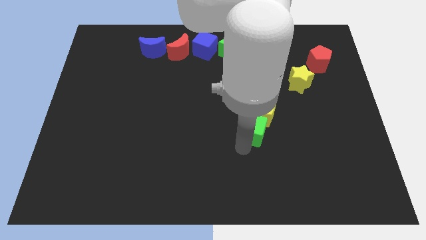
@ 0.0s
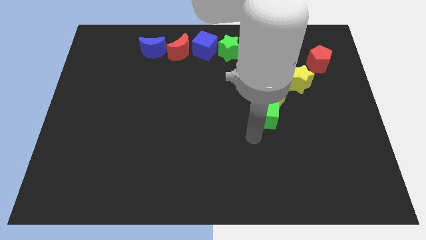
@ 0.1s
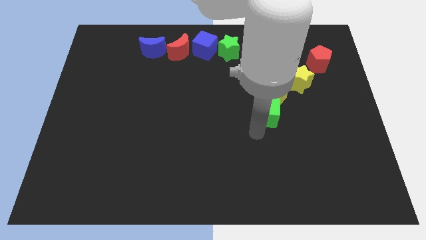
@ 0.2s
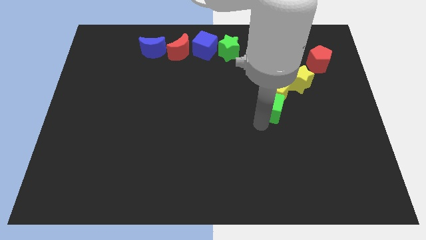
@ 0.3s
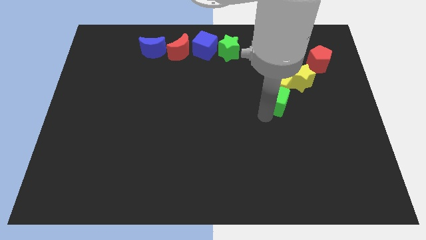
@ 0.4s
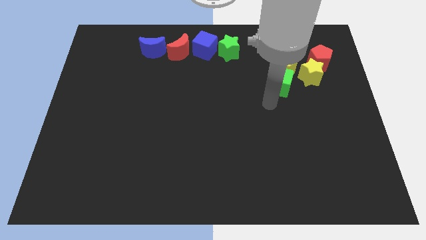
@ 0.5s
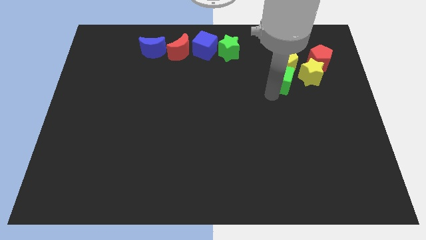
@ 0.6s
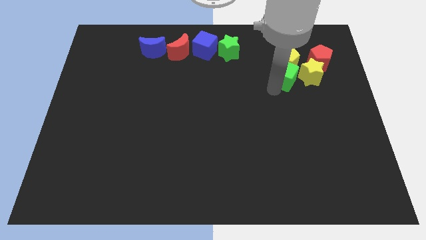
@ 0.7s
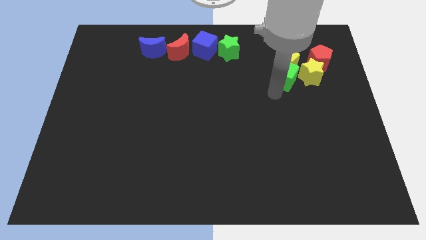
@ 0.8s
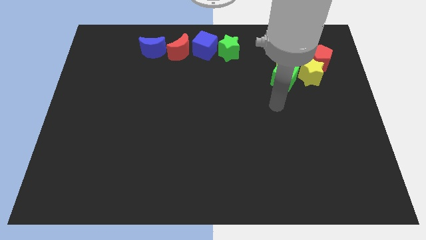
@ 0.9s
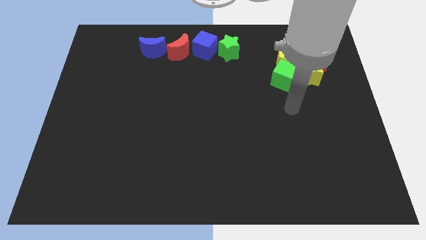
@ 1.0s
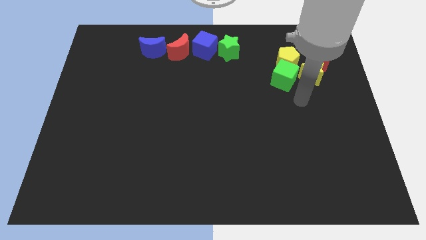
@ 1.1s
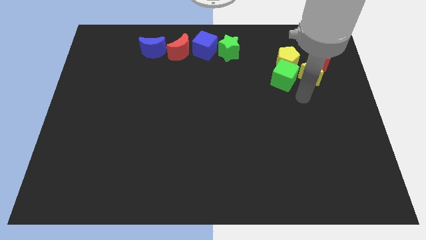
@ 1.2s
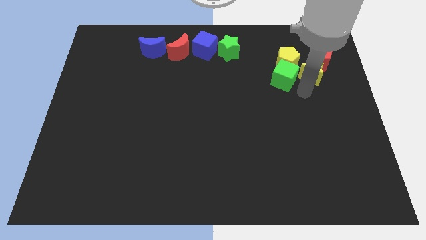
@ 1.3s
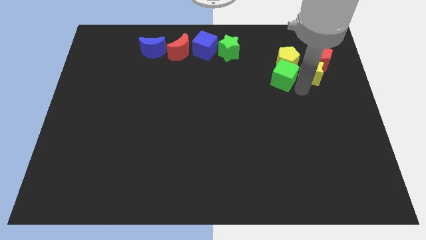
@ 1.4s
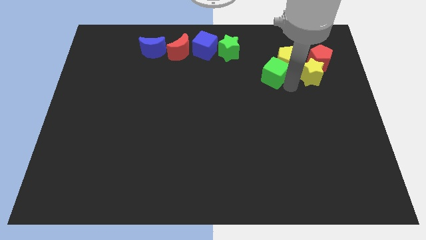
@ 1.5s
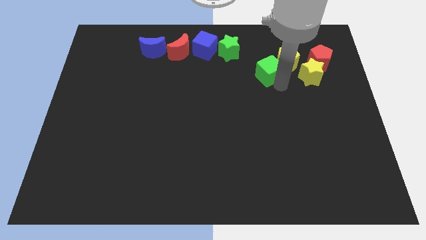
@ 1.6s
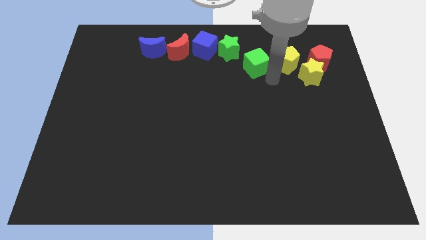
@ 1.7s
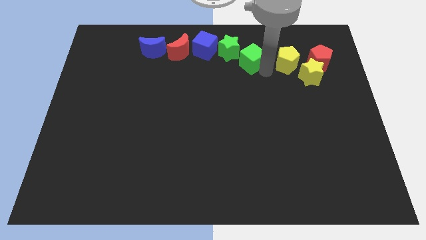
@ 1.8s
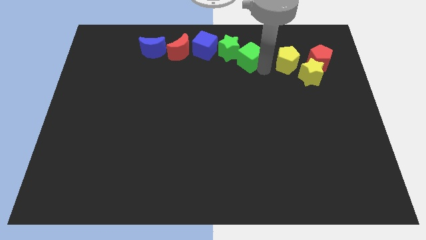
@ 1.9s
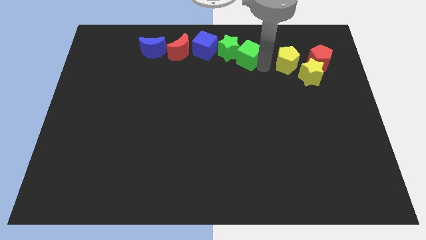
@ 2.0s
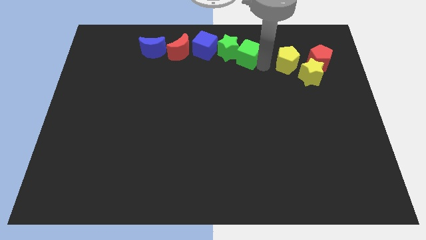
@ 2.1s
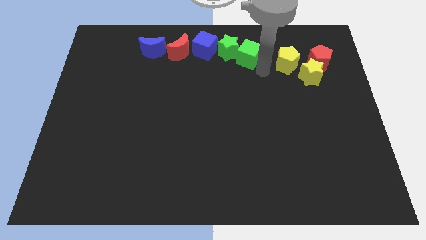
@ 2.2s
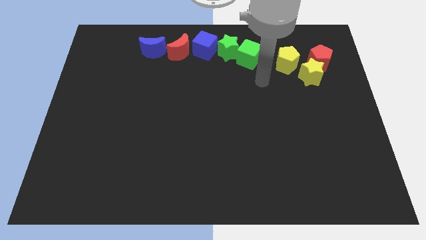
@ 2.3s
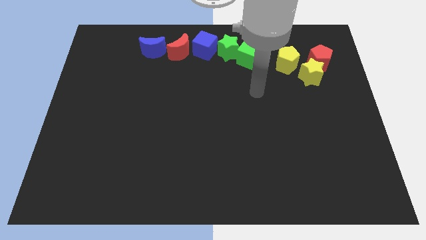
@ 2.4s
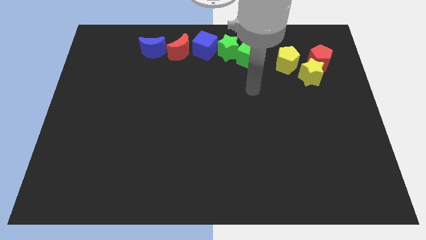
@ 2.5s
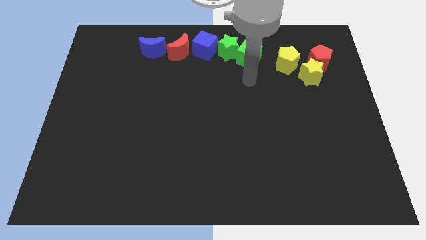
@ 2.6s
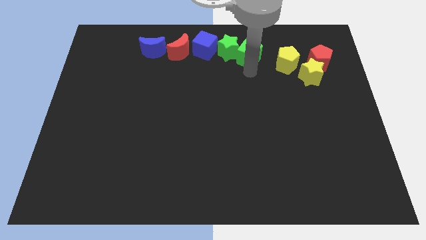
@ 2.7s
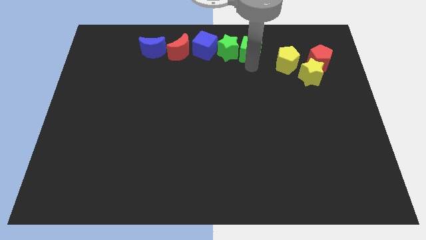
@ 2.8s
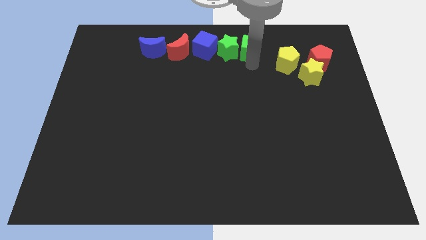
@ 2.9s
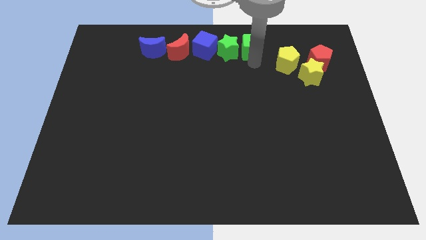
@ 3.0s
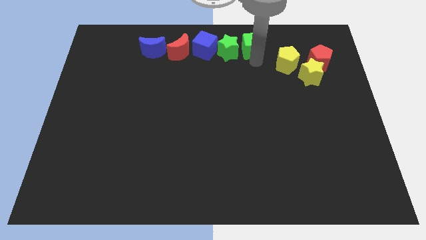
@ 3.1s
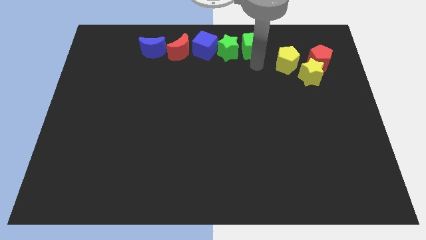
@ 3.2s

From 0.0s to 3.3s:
move green cube right to the green star

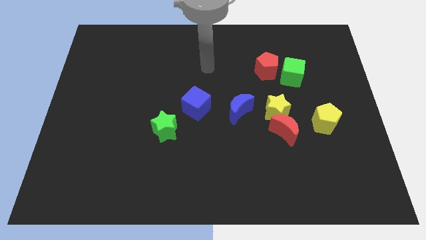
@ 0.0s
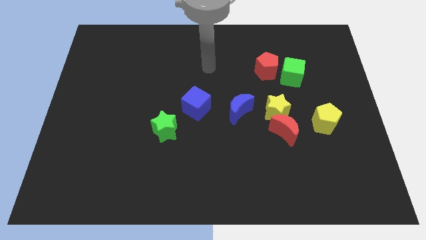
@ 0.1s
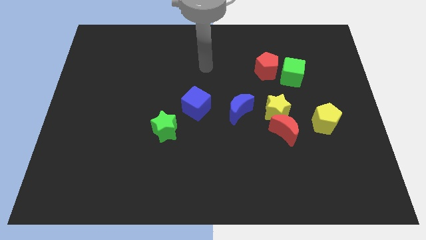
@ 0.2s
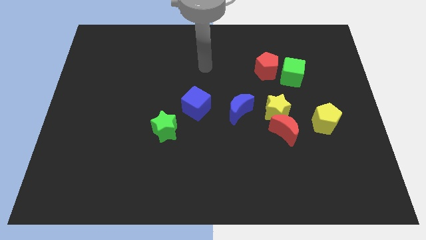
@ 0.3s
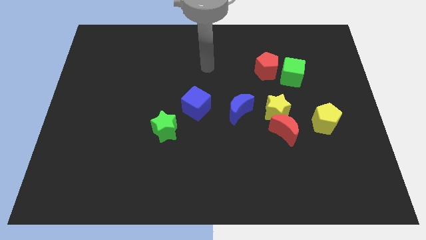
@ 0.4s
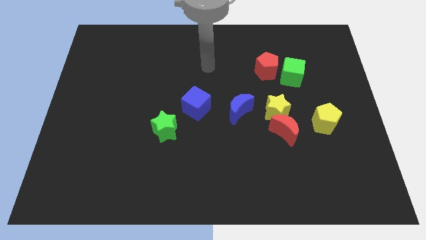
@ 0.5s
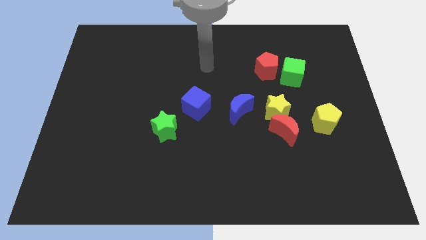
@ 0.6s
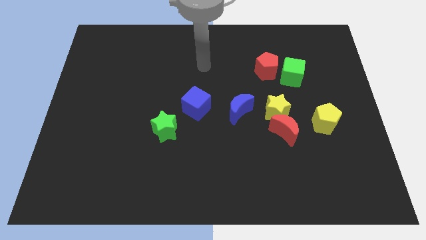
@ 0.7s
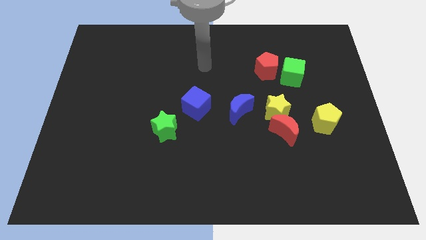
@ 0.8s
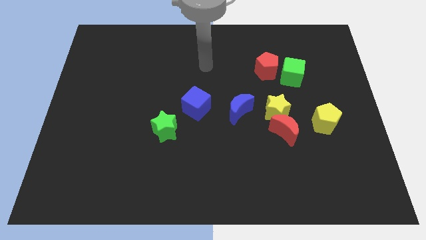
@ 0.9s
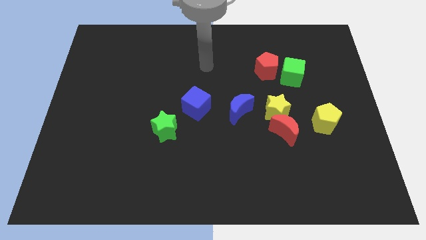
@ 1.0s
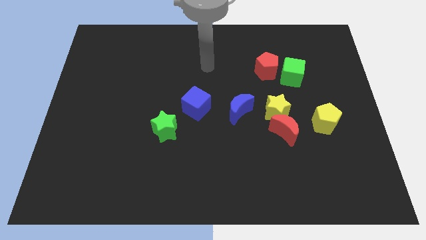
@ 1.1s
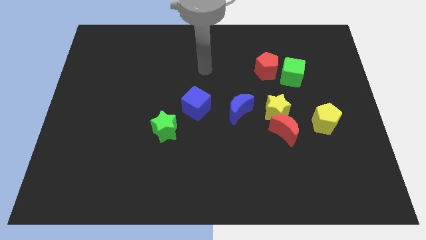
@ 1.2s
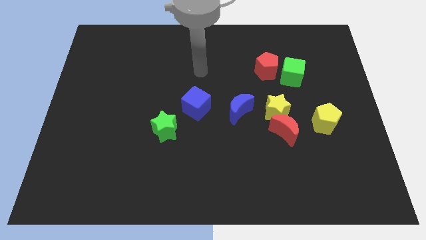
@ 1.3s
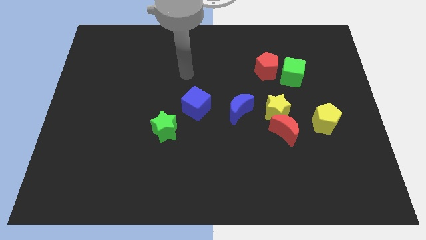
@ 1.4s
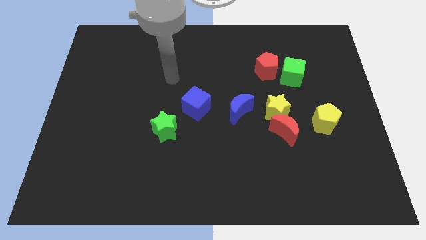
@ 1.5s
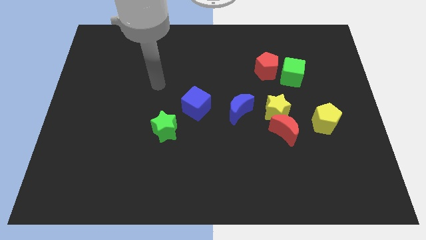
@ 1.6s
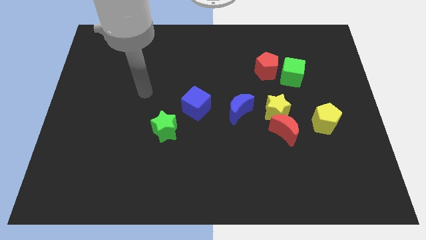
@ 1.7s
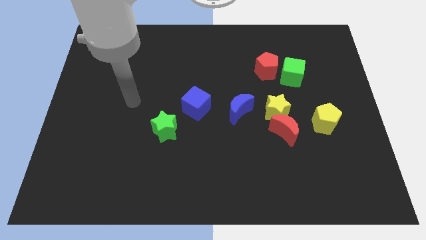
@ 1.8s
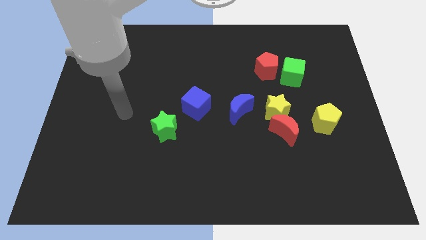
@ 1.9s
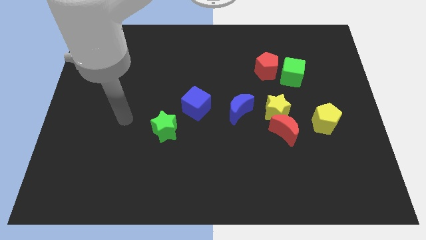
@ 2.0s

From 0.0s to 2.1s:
place the arm to the left of green star

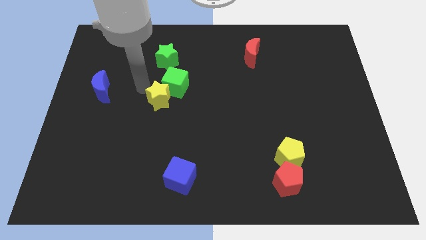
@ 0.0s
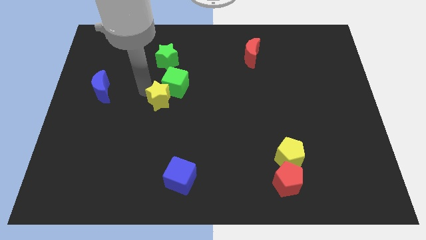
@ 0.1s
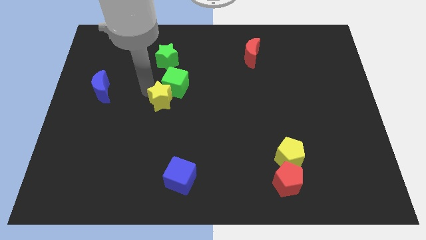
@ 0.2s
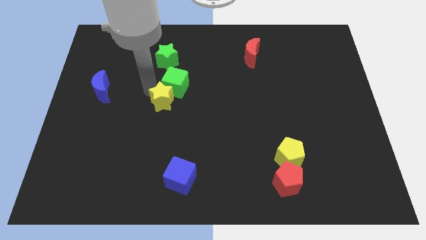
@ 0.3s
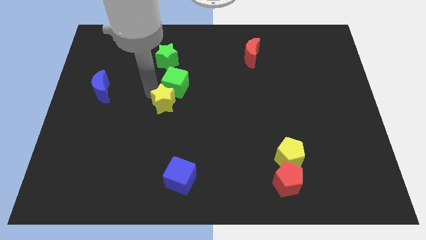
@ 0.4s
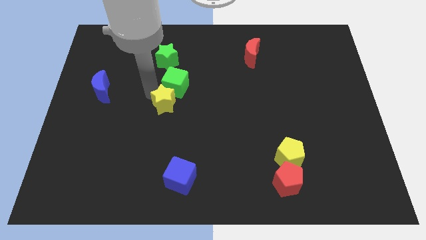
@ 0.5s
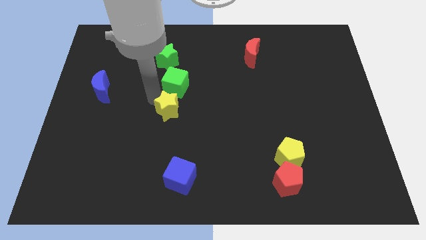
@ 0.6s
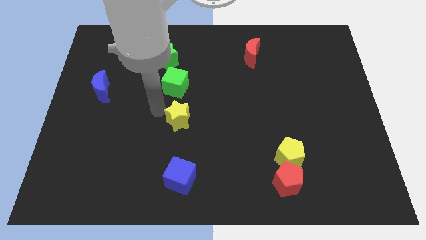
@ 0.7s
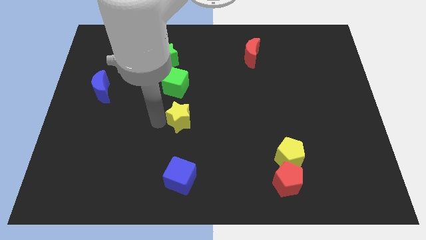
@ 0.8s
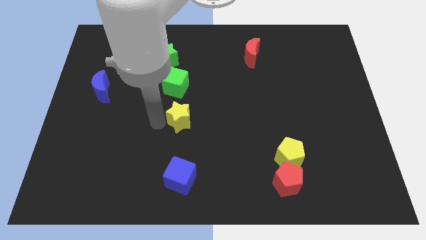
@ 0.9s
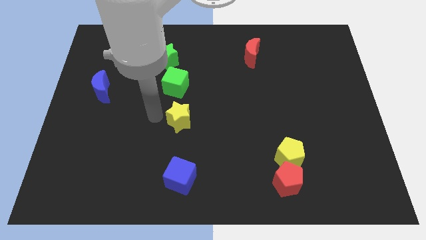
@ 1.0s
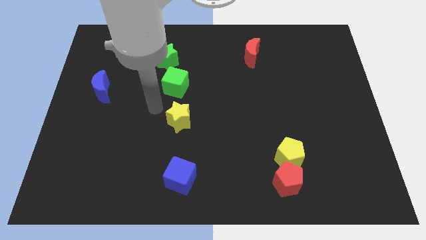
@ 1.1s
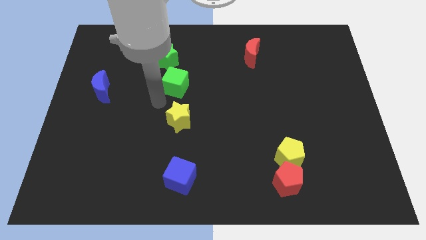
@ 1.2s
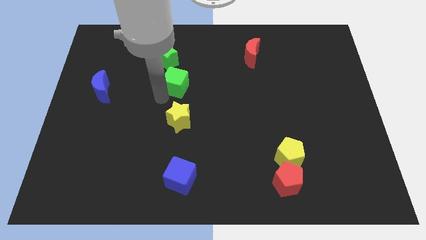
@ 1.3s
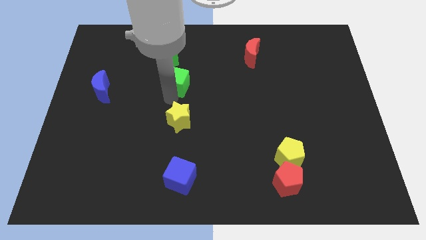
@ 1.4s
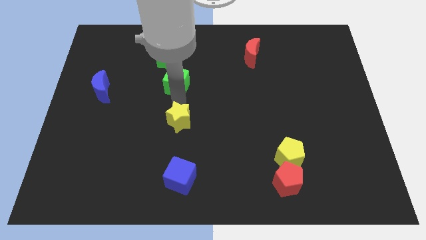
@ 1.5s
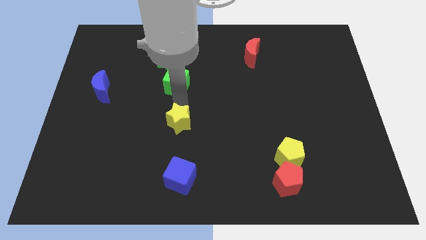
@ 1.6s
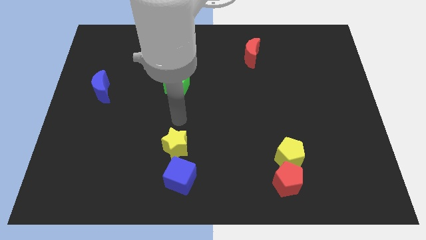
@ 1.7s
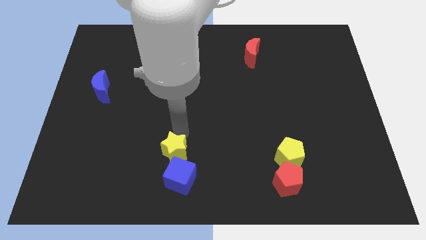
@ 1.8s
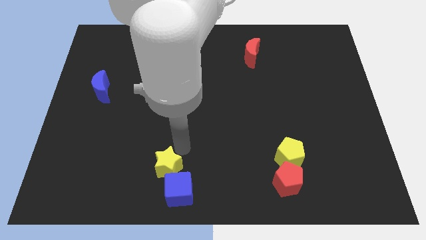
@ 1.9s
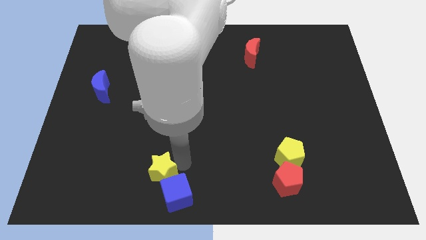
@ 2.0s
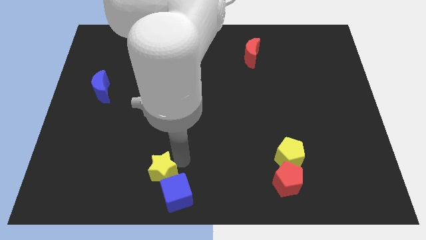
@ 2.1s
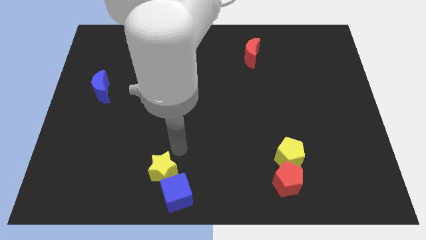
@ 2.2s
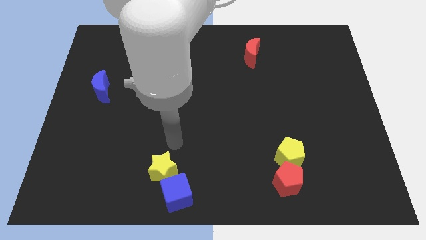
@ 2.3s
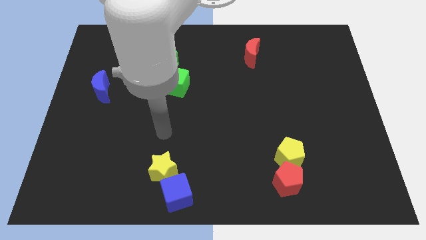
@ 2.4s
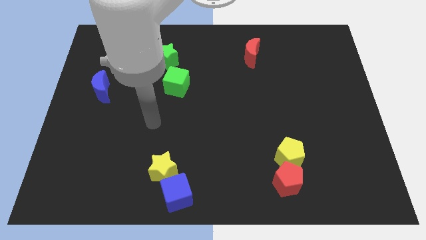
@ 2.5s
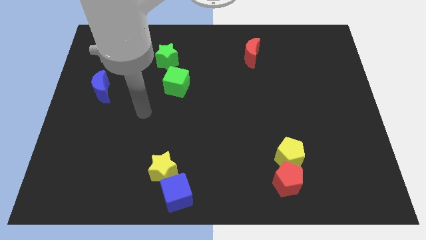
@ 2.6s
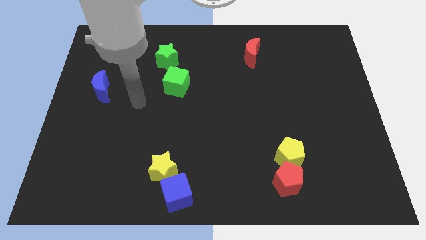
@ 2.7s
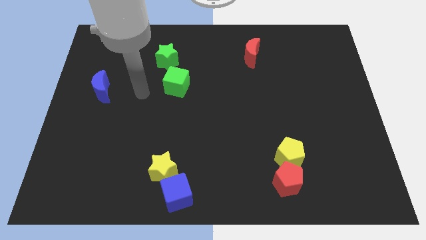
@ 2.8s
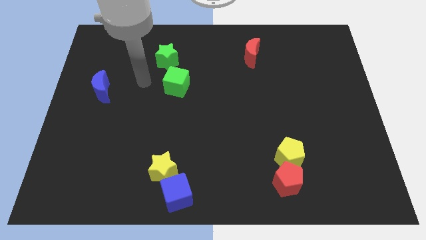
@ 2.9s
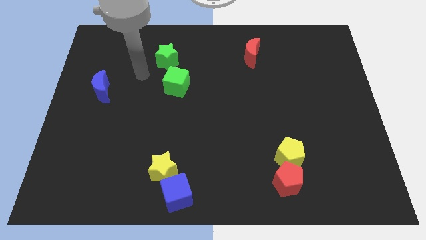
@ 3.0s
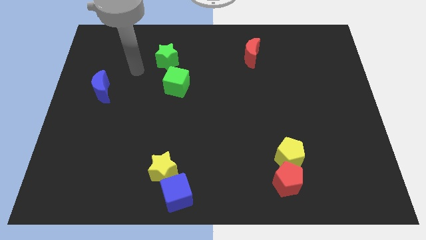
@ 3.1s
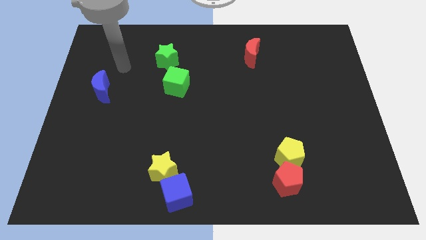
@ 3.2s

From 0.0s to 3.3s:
push the yellow star into the blue cube

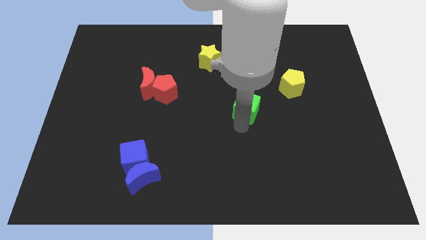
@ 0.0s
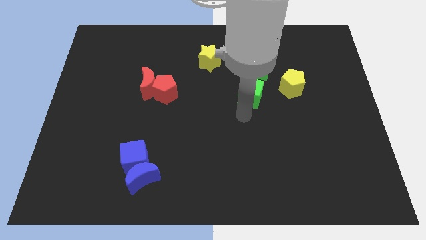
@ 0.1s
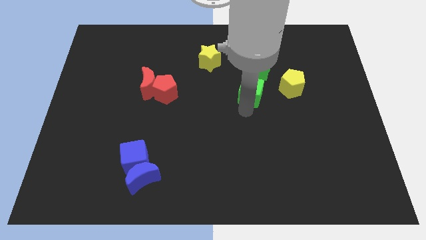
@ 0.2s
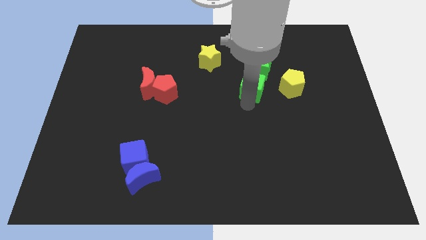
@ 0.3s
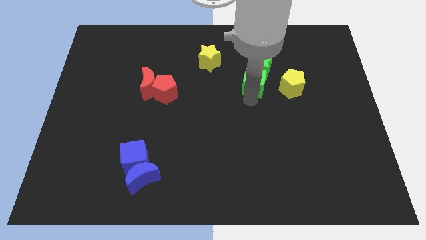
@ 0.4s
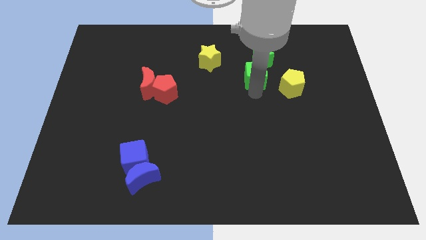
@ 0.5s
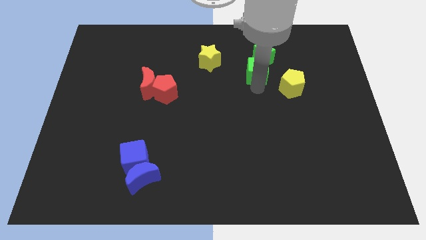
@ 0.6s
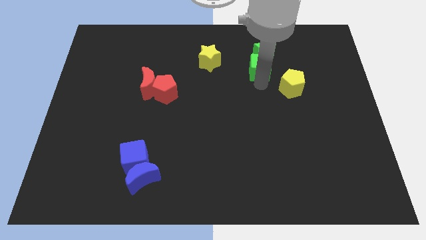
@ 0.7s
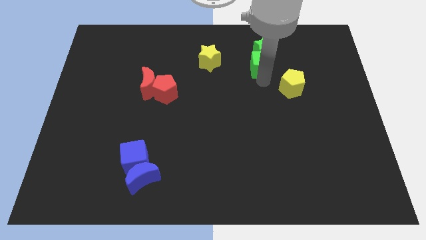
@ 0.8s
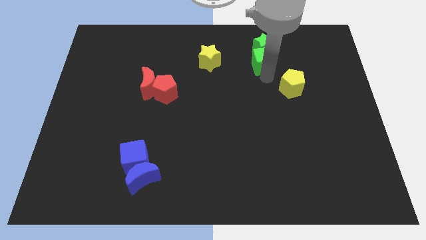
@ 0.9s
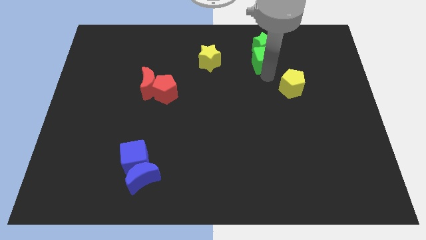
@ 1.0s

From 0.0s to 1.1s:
push the green cube into the green star
